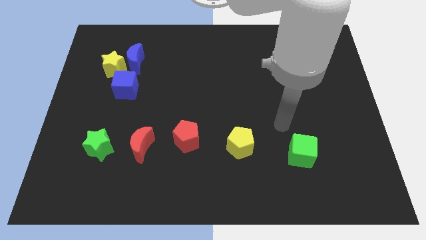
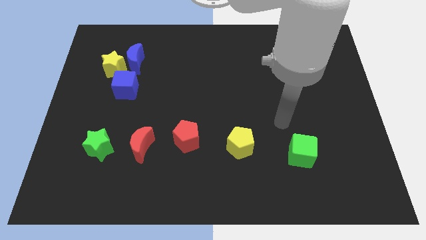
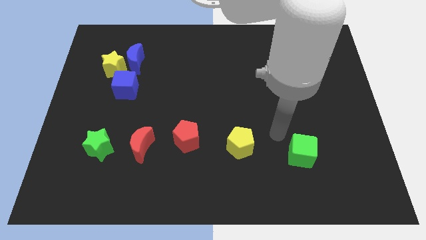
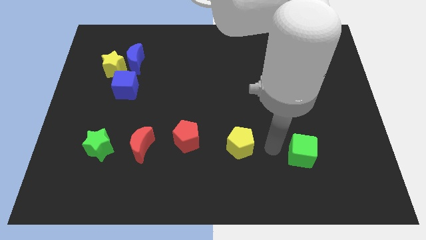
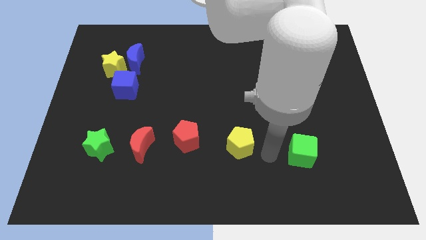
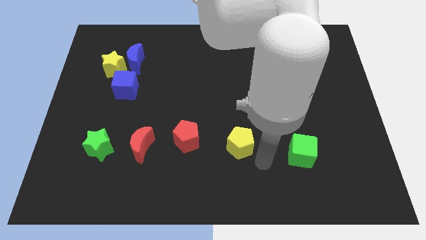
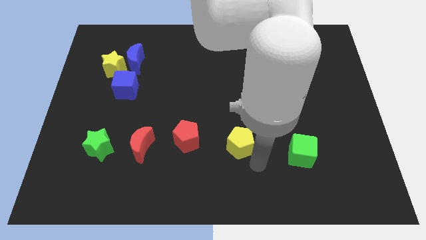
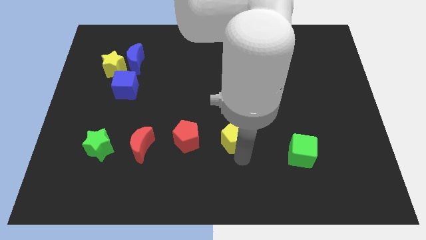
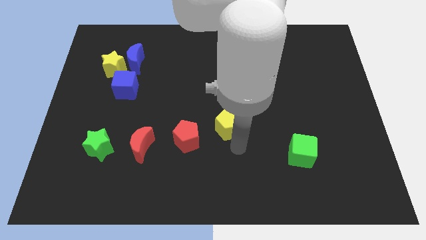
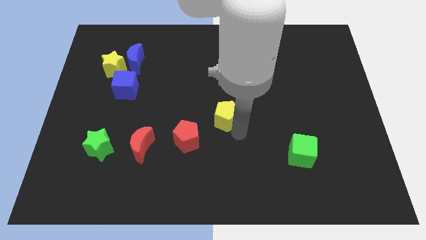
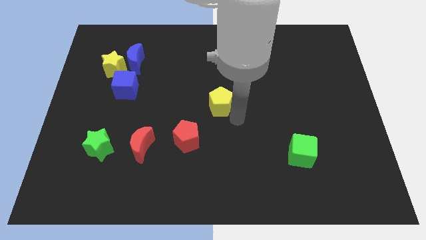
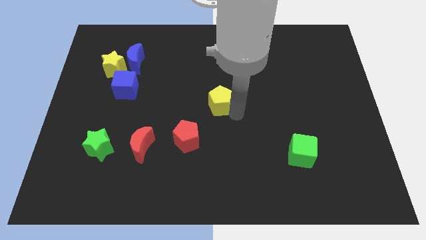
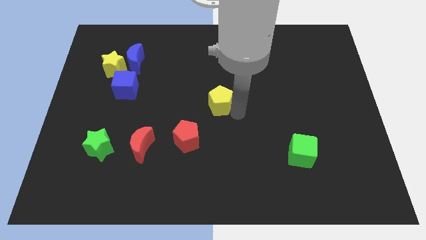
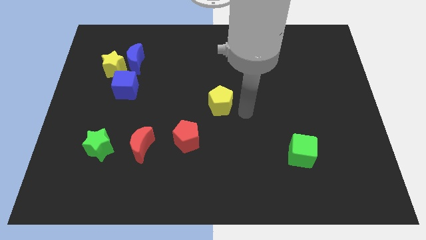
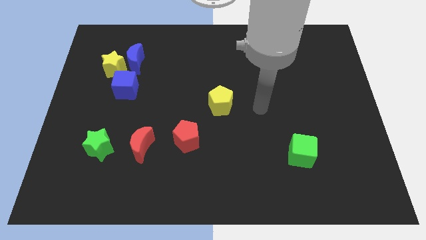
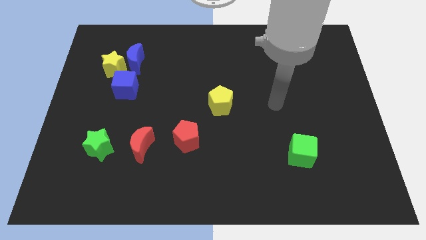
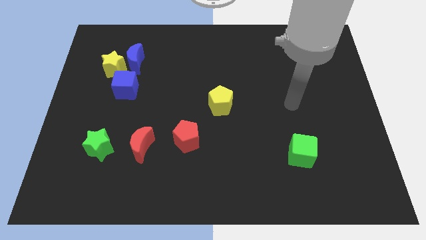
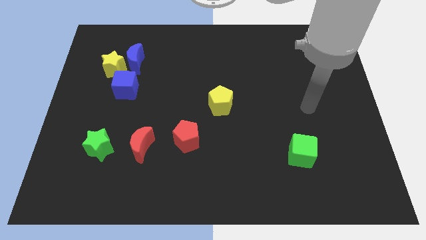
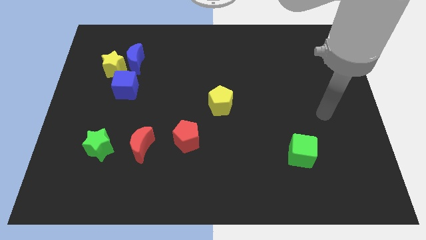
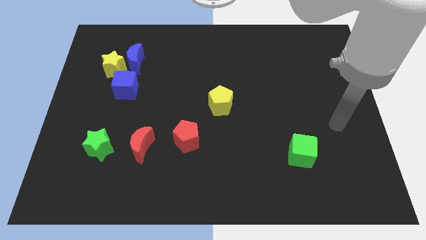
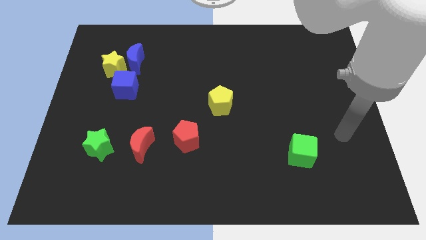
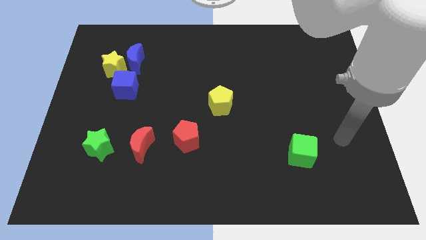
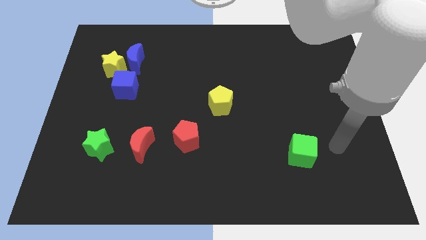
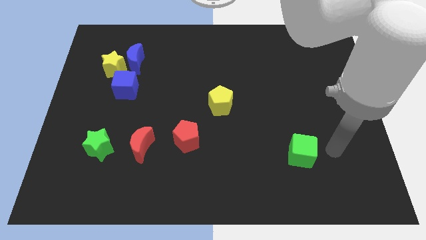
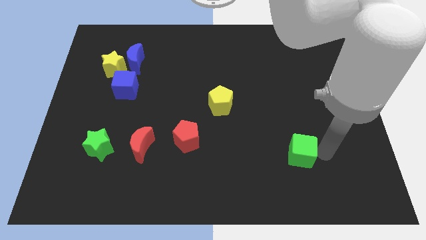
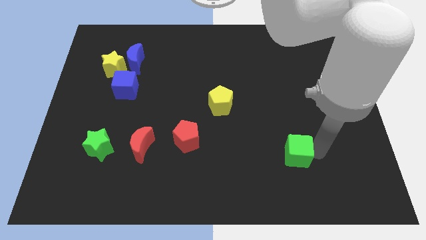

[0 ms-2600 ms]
push the yellow pentagon to the center of the board

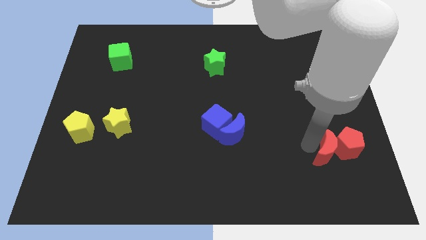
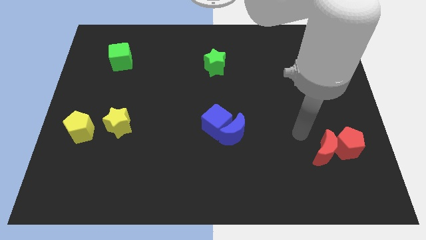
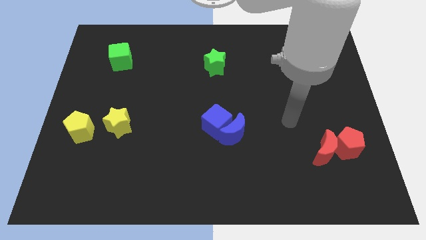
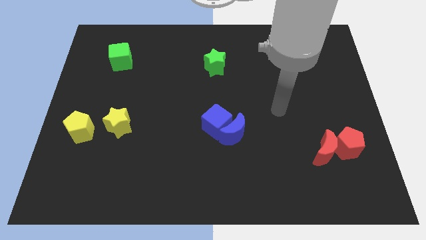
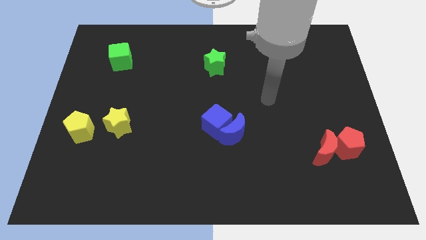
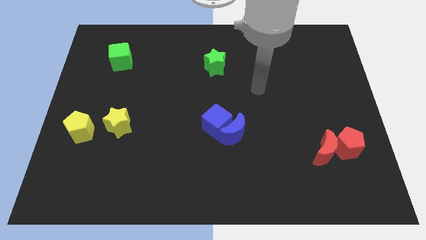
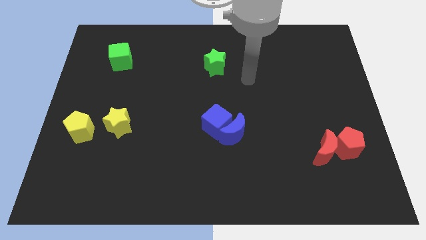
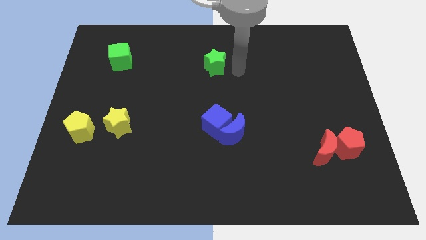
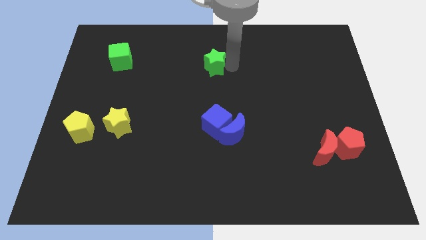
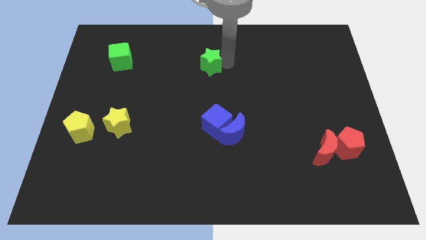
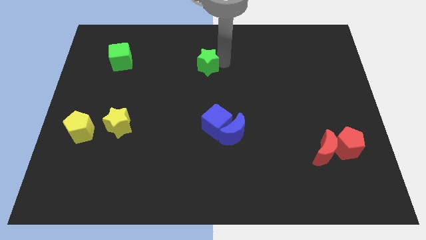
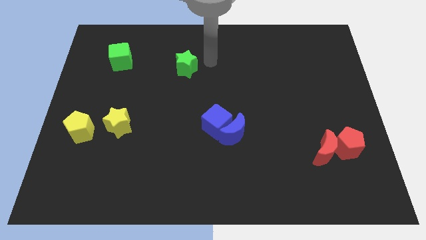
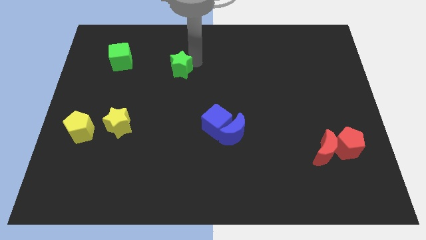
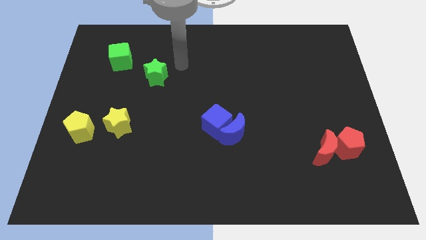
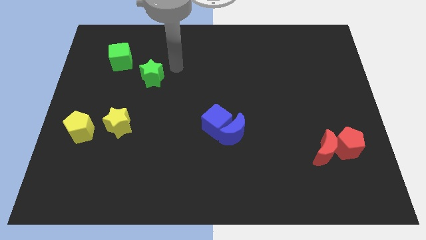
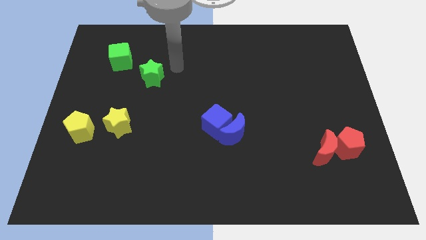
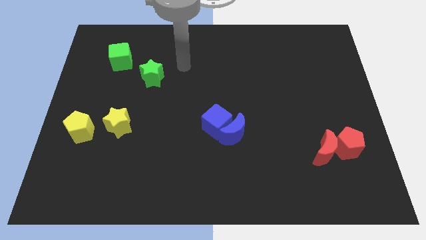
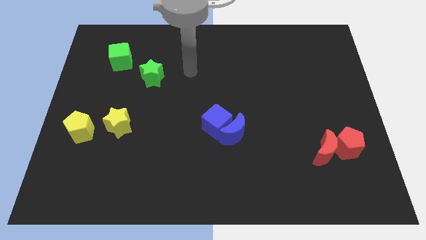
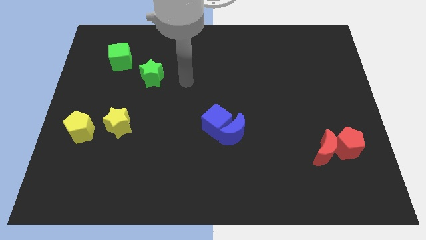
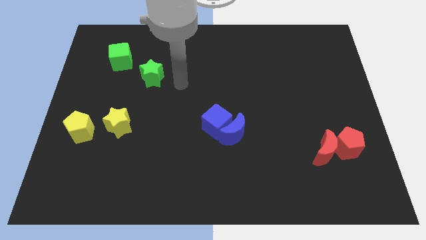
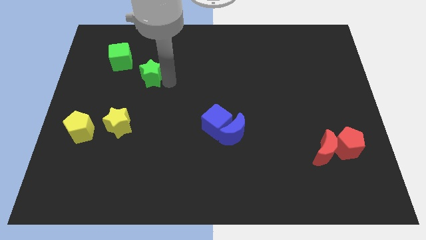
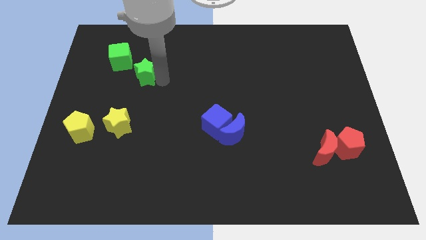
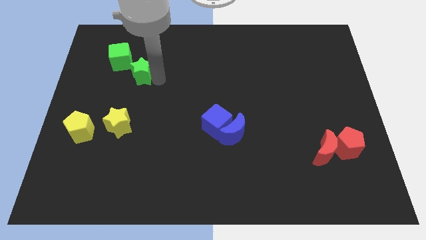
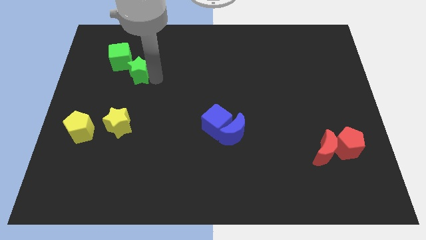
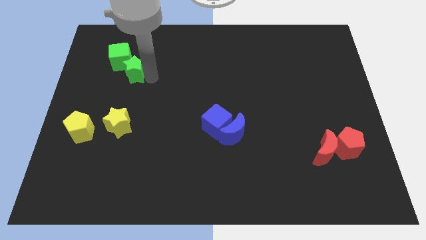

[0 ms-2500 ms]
move the green star to the bottom right of the green cube

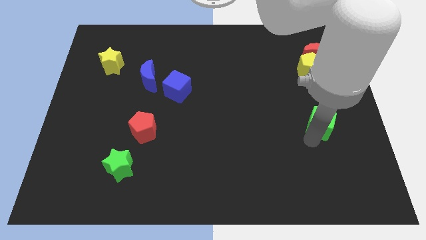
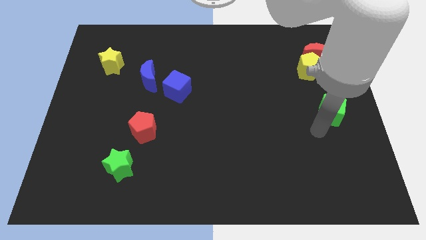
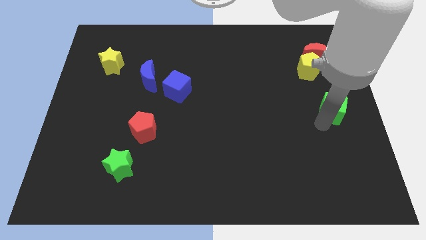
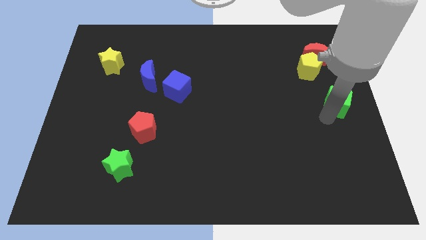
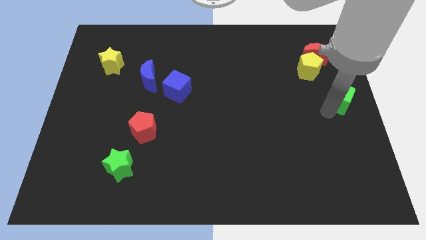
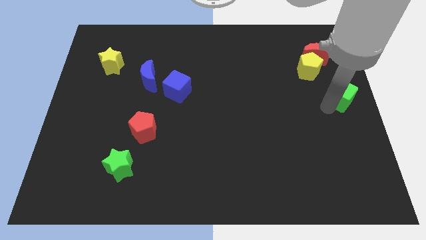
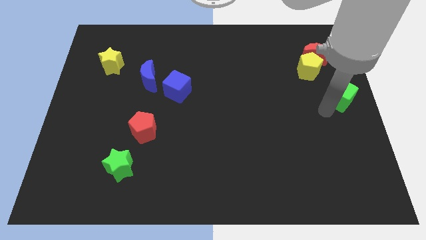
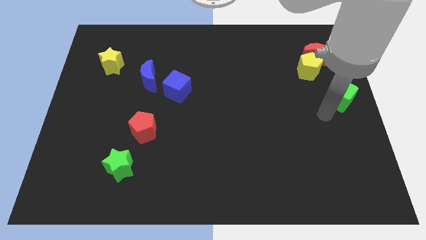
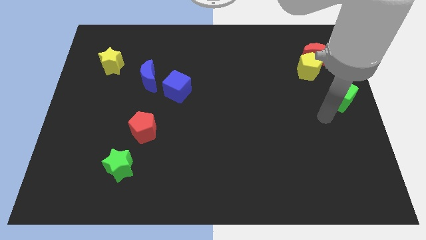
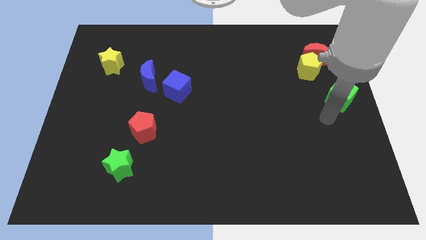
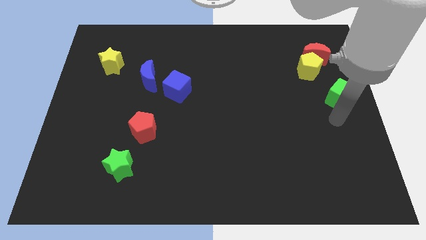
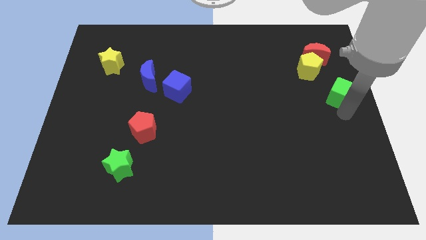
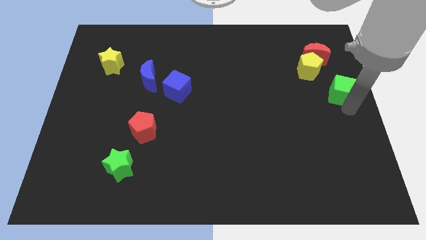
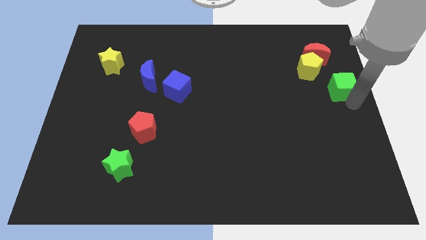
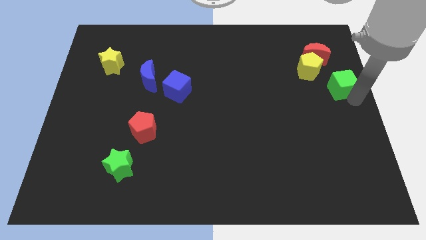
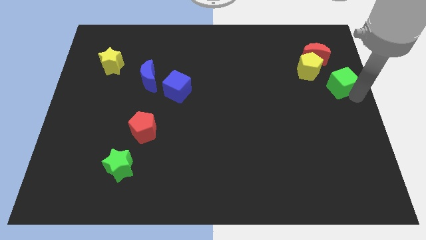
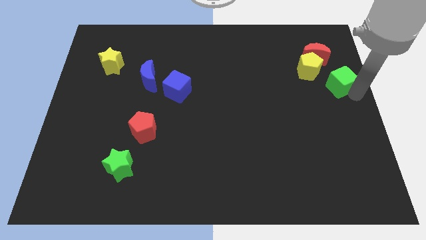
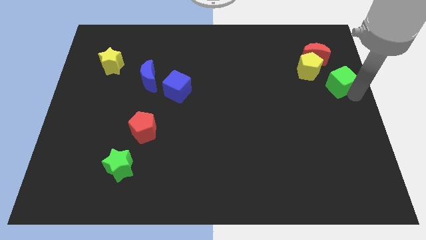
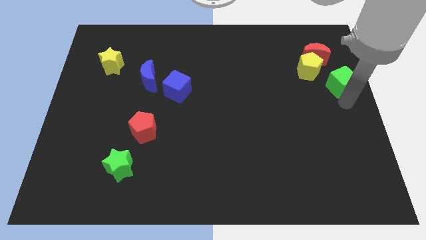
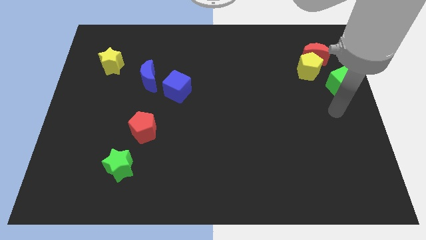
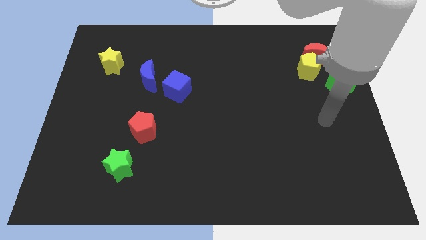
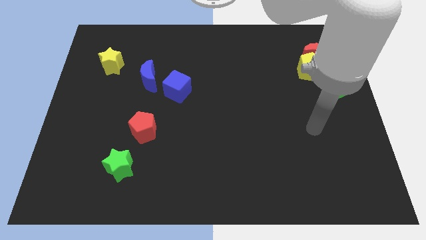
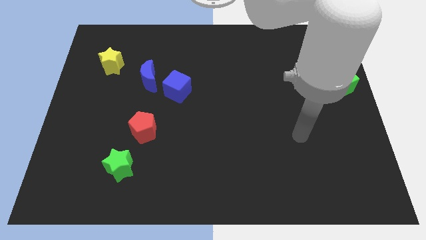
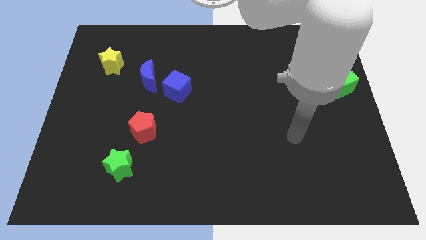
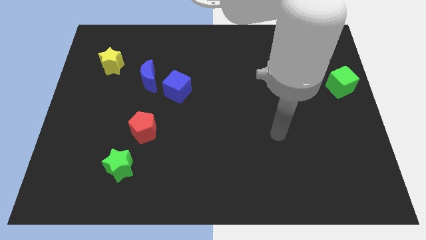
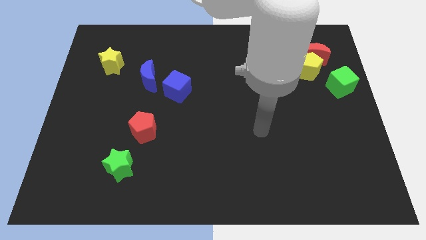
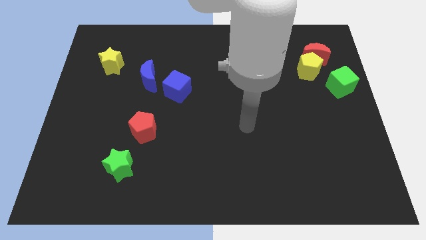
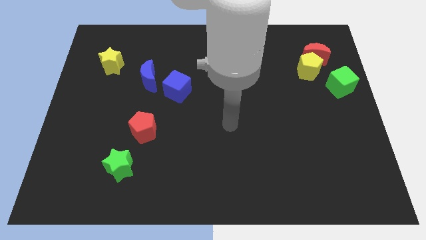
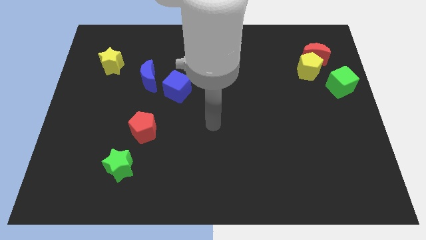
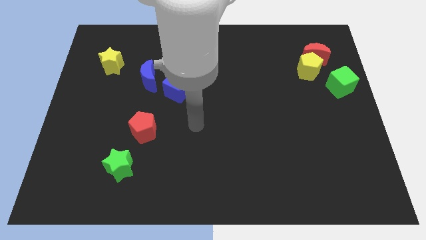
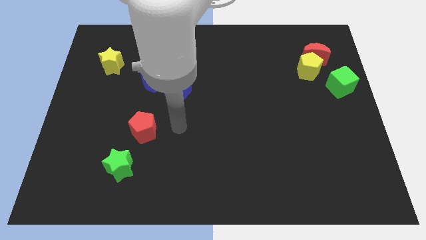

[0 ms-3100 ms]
drag the green cube to the bottom right of yellow pentagon

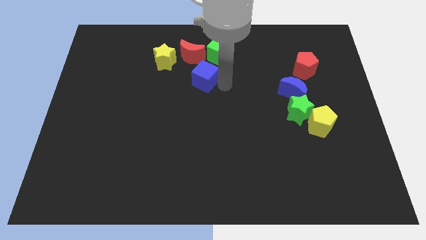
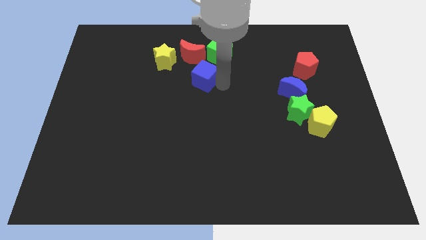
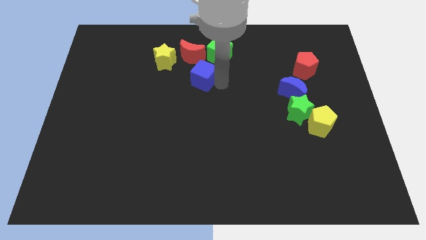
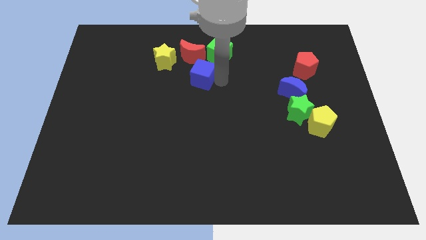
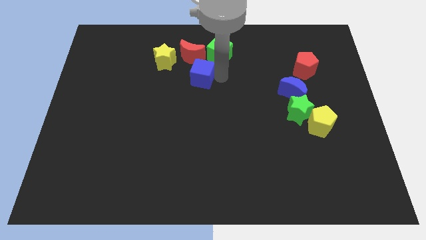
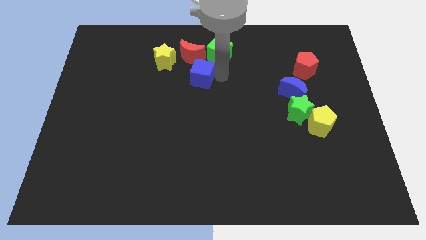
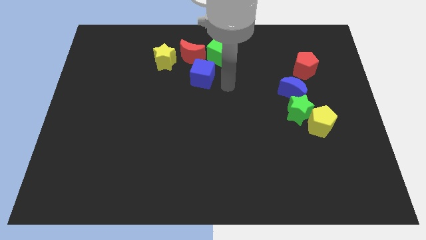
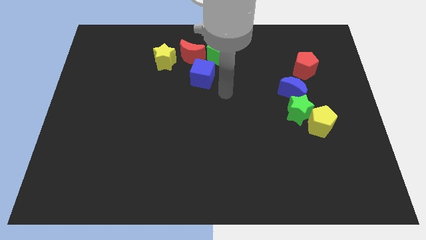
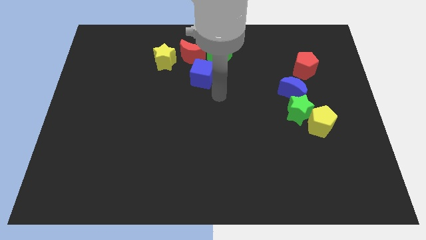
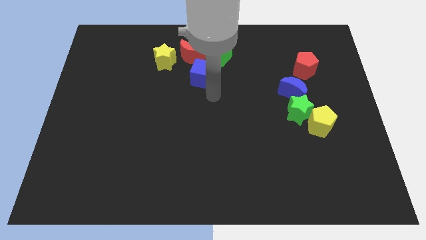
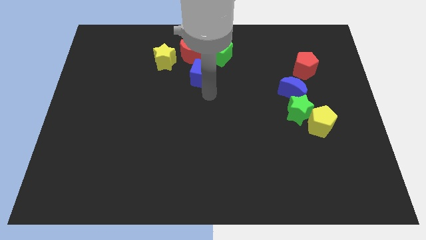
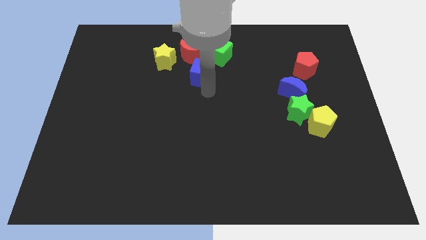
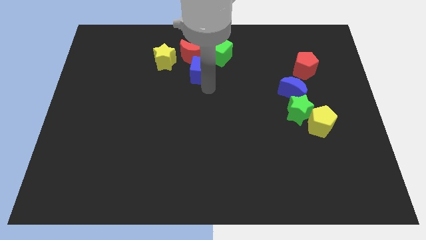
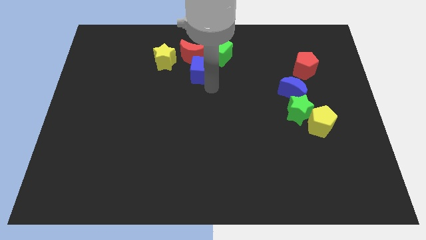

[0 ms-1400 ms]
move the blue cube to the bottom of the red crescent
